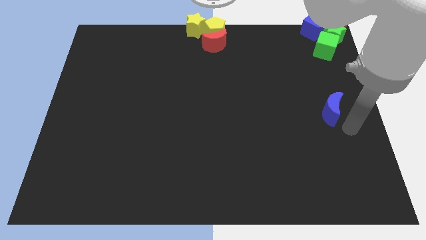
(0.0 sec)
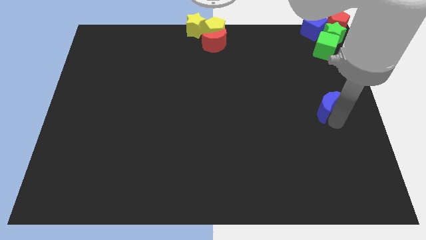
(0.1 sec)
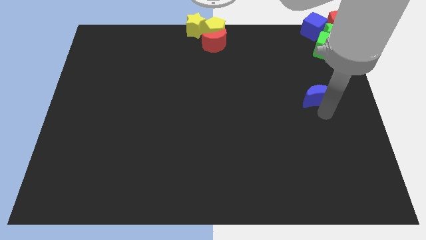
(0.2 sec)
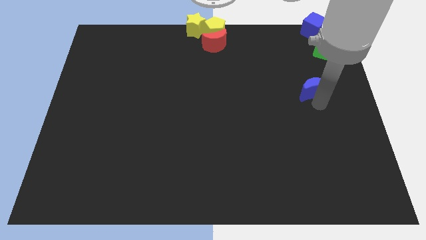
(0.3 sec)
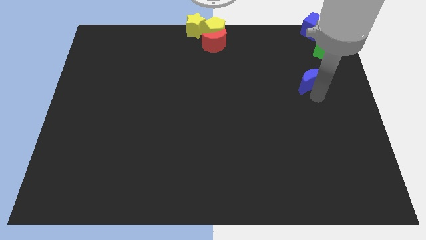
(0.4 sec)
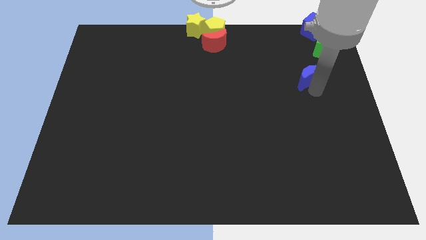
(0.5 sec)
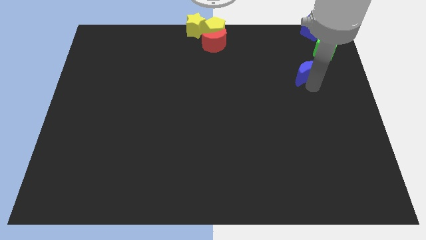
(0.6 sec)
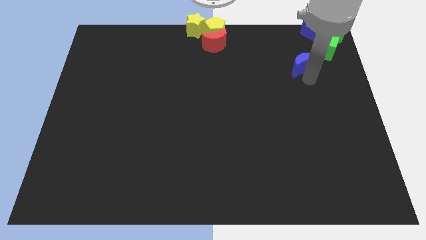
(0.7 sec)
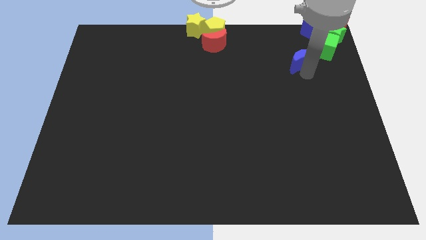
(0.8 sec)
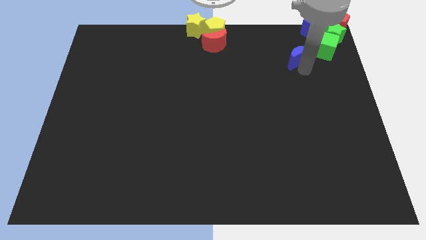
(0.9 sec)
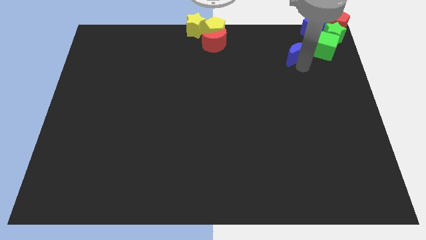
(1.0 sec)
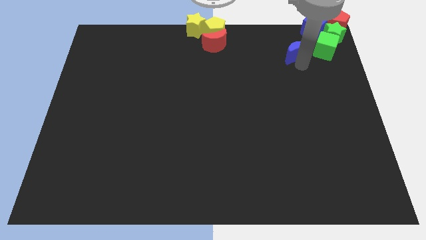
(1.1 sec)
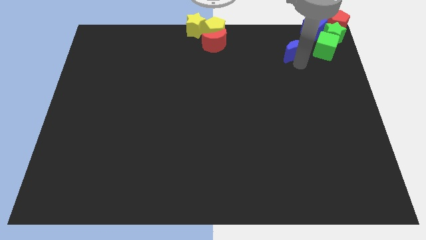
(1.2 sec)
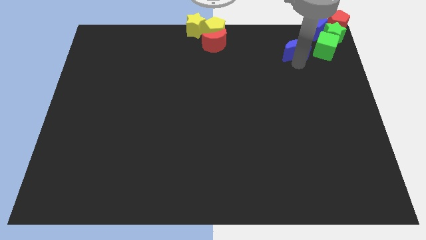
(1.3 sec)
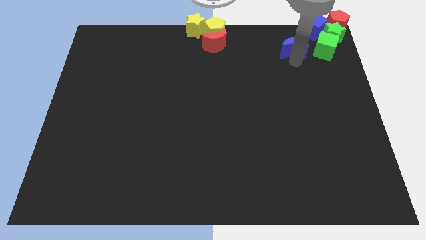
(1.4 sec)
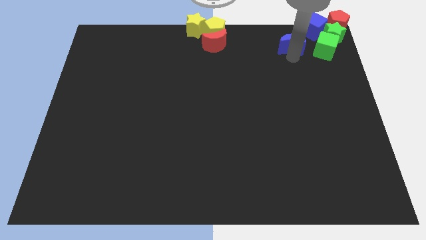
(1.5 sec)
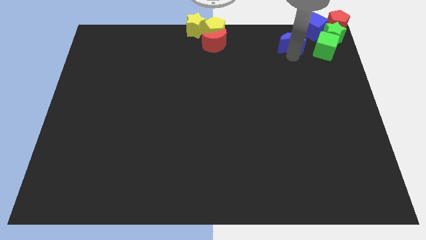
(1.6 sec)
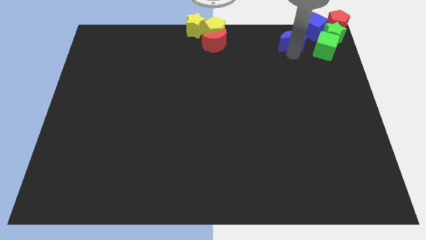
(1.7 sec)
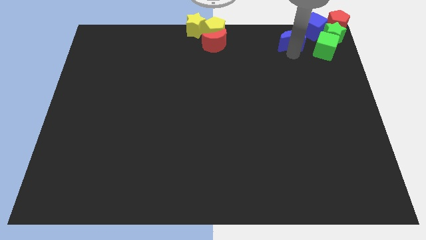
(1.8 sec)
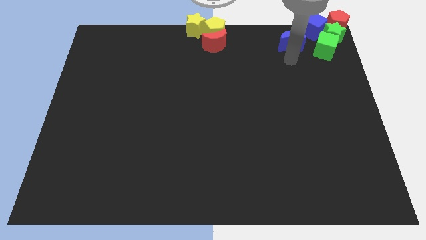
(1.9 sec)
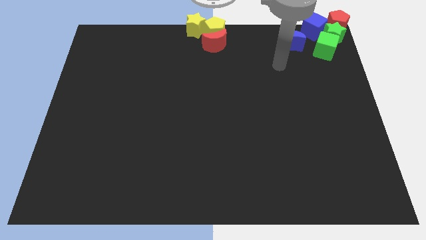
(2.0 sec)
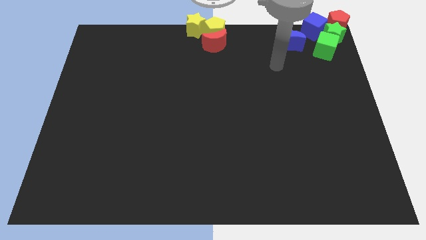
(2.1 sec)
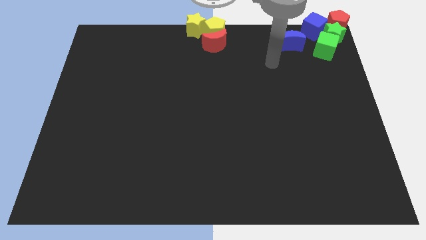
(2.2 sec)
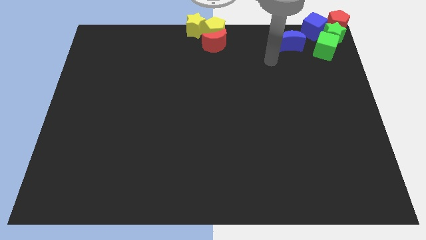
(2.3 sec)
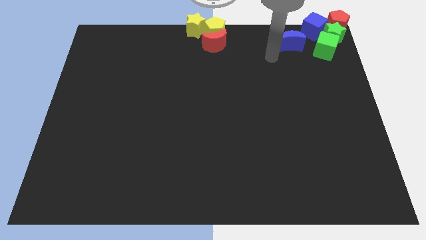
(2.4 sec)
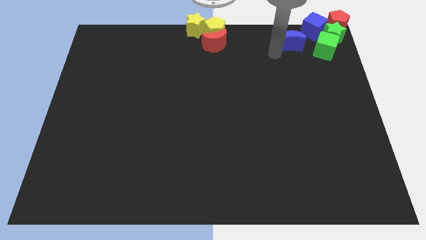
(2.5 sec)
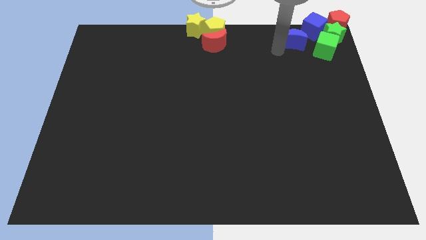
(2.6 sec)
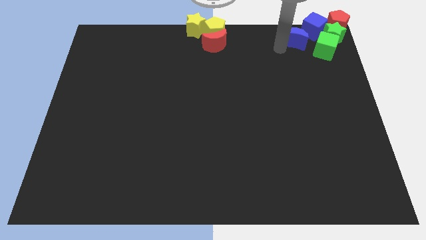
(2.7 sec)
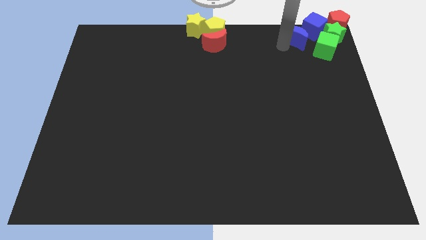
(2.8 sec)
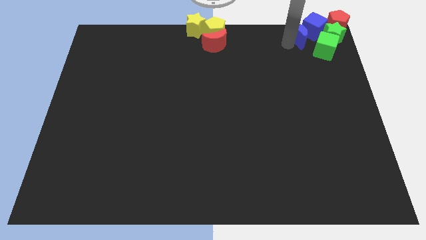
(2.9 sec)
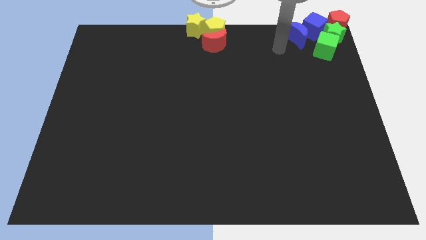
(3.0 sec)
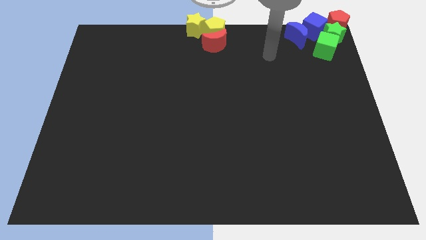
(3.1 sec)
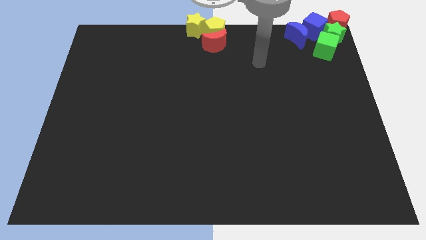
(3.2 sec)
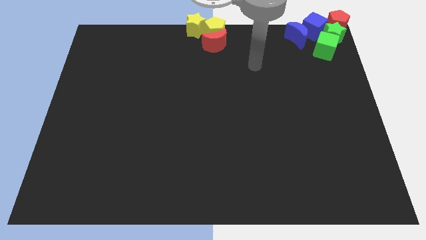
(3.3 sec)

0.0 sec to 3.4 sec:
place blue moon close to blue cube

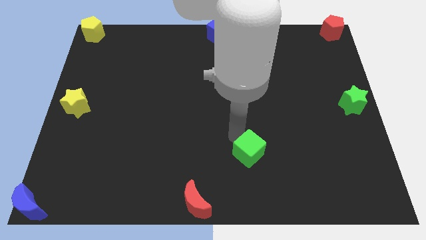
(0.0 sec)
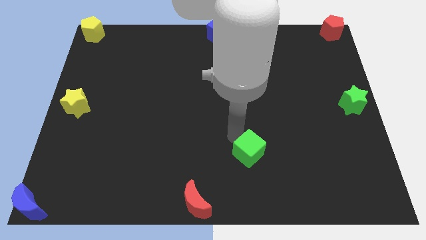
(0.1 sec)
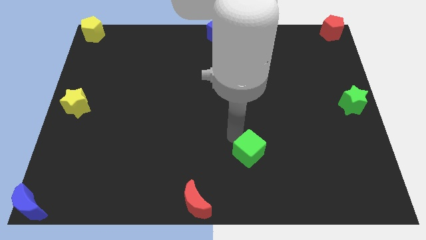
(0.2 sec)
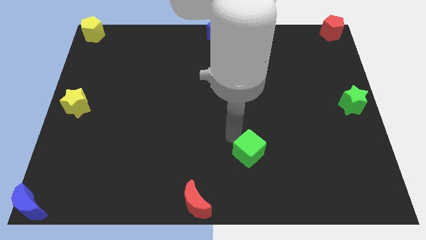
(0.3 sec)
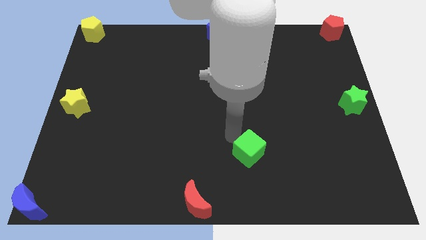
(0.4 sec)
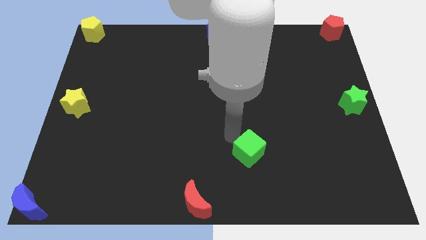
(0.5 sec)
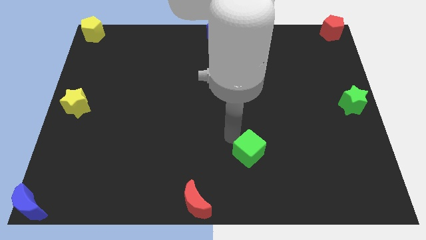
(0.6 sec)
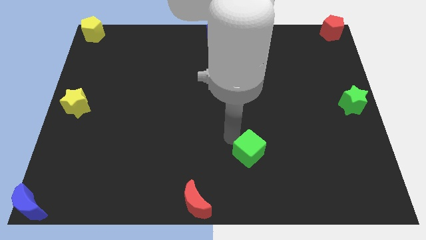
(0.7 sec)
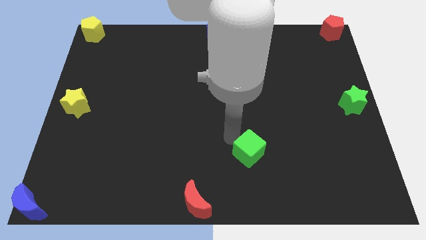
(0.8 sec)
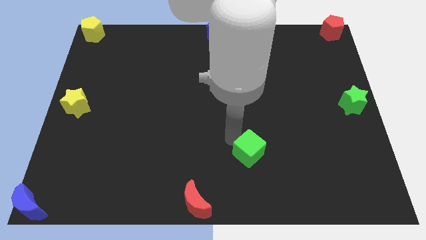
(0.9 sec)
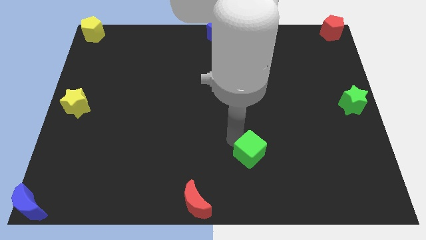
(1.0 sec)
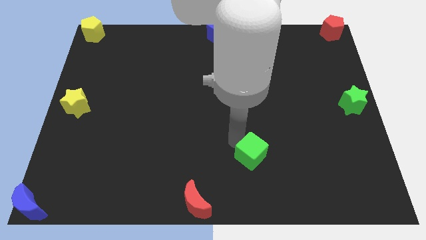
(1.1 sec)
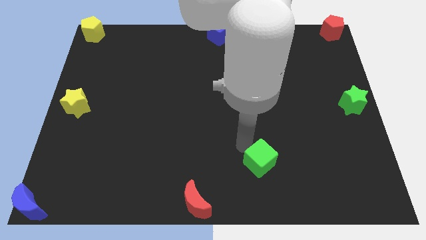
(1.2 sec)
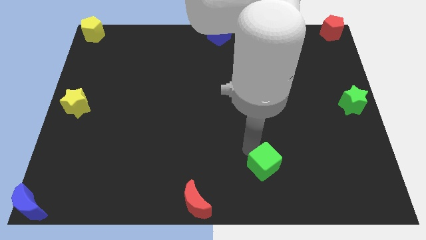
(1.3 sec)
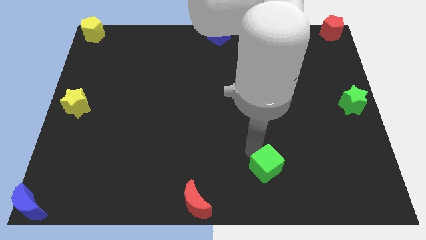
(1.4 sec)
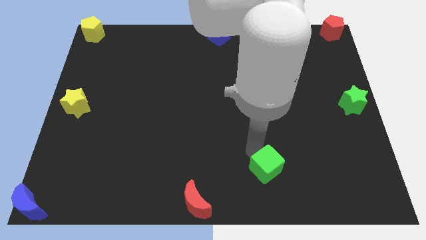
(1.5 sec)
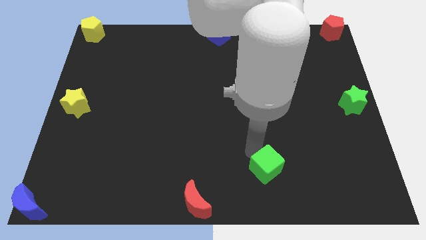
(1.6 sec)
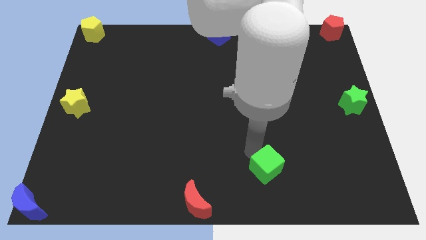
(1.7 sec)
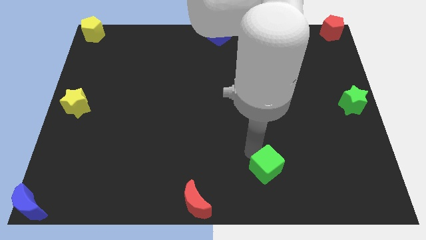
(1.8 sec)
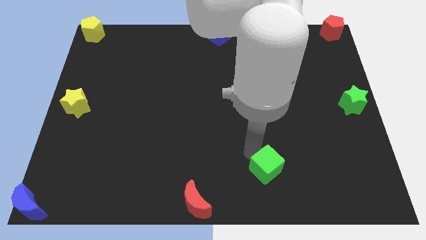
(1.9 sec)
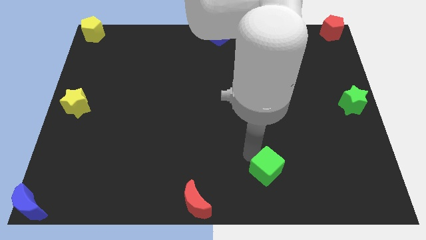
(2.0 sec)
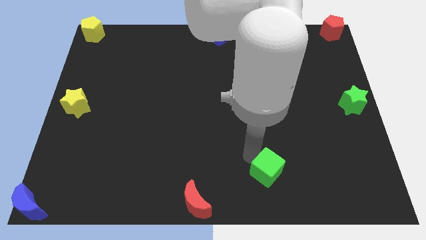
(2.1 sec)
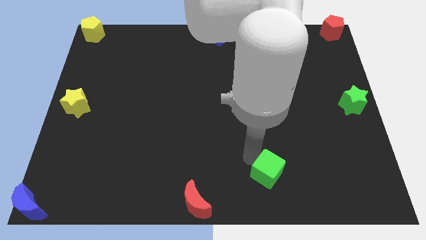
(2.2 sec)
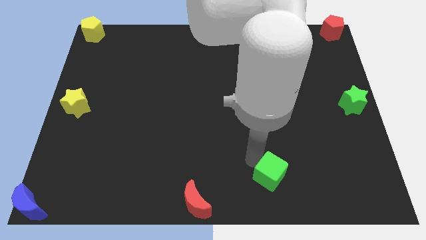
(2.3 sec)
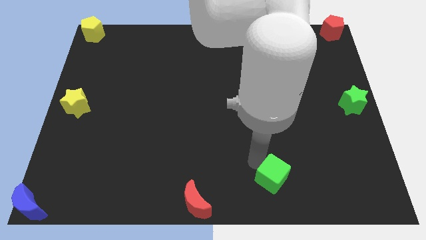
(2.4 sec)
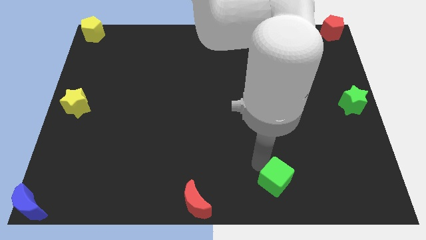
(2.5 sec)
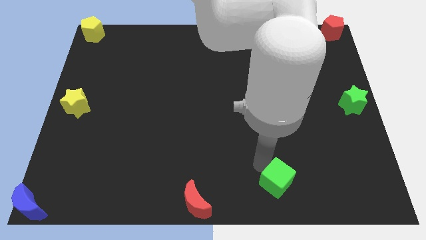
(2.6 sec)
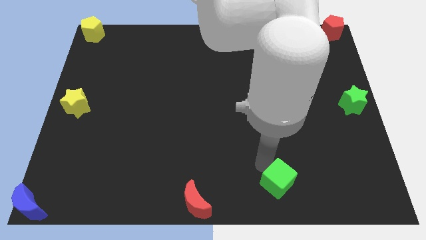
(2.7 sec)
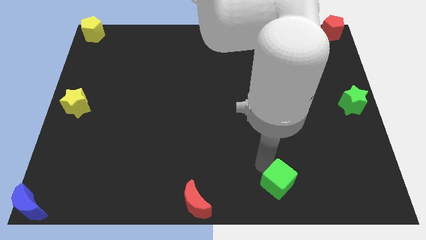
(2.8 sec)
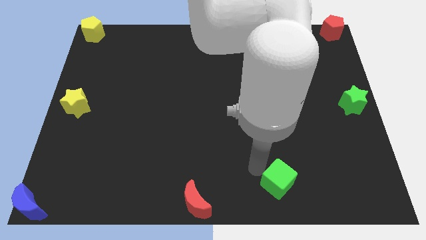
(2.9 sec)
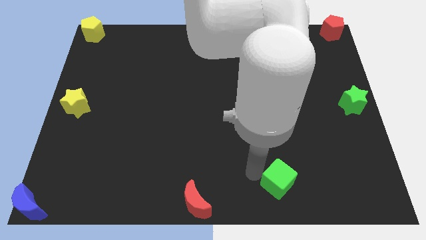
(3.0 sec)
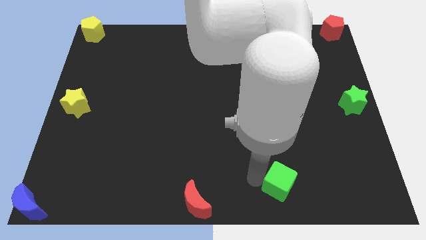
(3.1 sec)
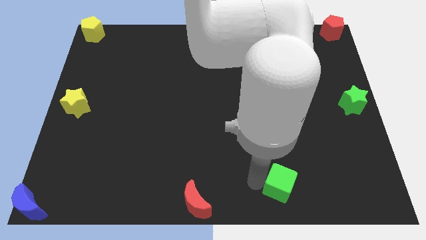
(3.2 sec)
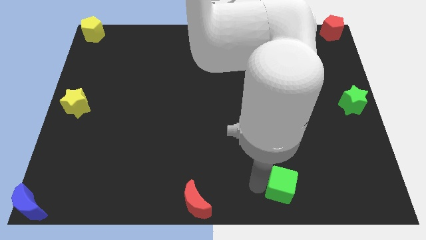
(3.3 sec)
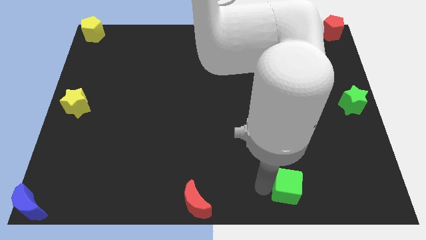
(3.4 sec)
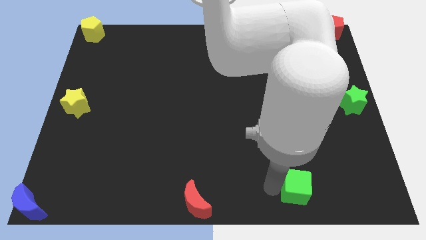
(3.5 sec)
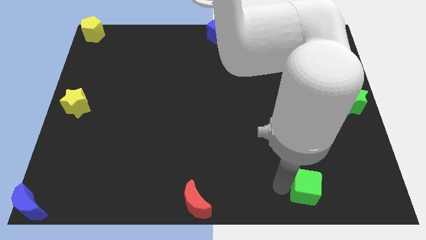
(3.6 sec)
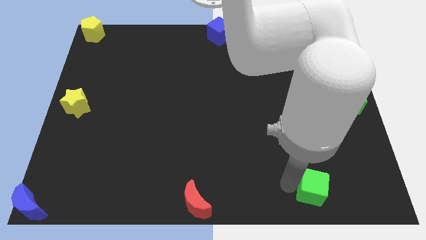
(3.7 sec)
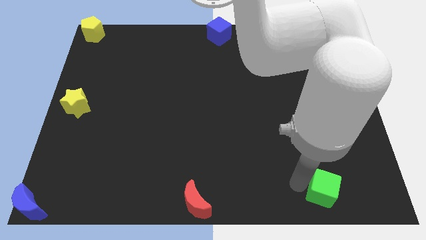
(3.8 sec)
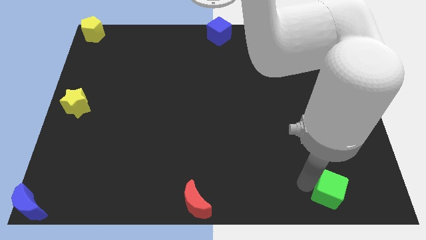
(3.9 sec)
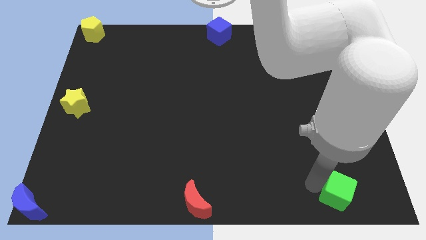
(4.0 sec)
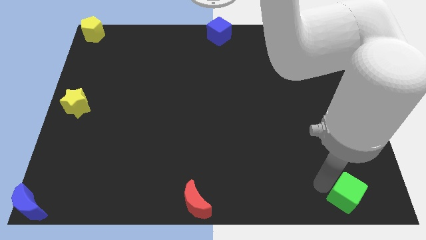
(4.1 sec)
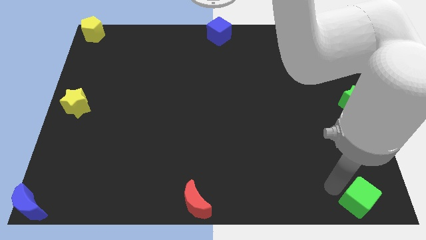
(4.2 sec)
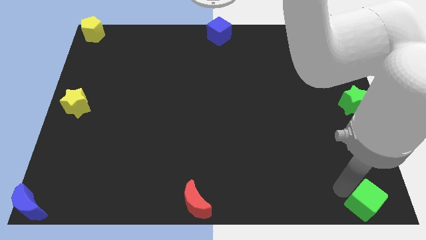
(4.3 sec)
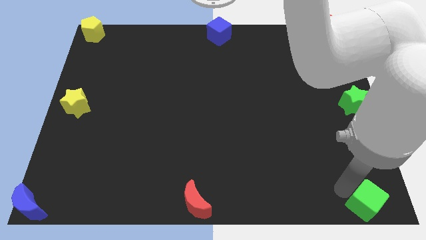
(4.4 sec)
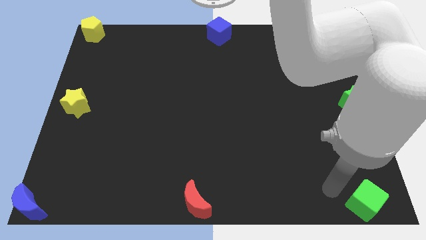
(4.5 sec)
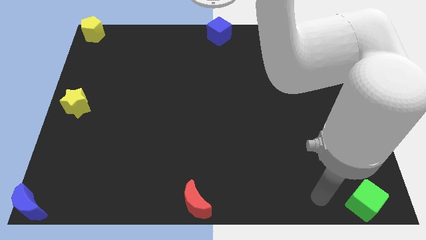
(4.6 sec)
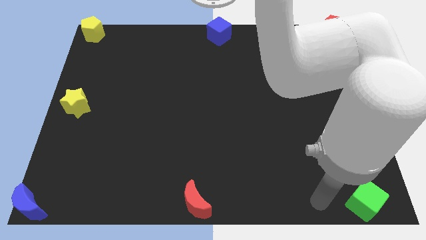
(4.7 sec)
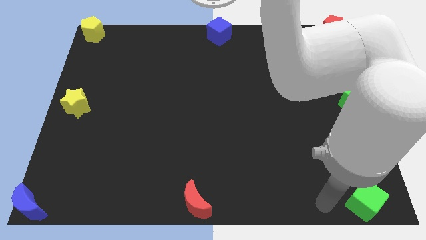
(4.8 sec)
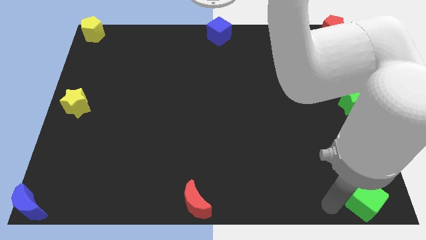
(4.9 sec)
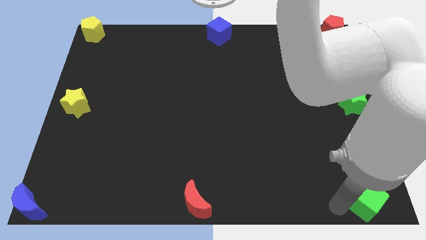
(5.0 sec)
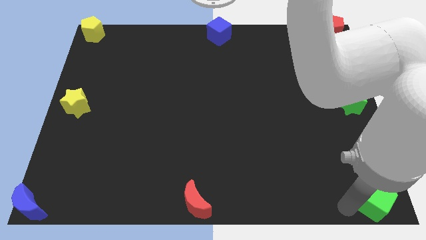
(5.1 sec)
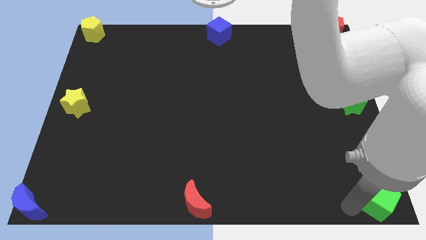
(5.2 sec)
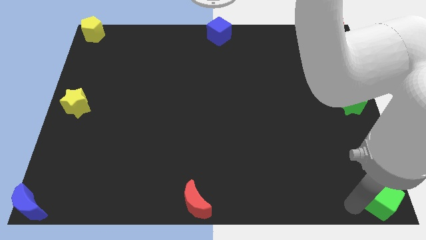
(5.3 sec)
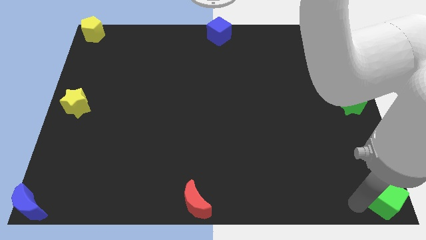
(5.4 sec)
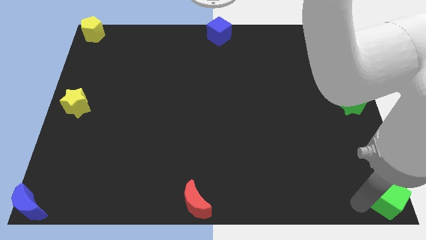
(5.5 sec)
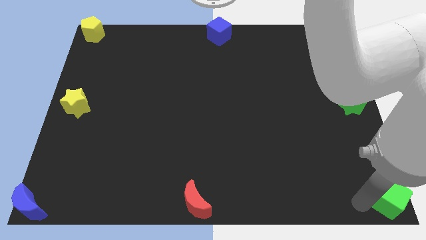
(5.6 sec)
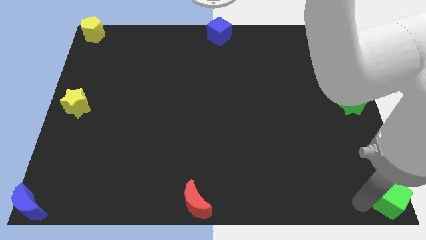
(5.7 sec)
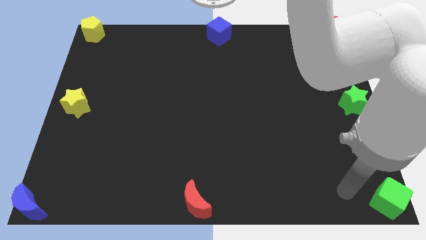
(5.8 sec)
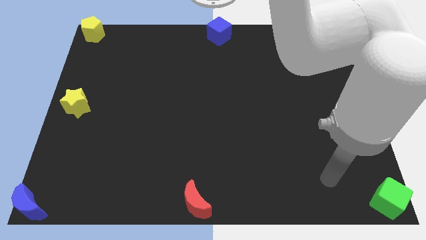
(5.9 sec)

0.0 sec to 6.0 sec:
push the green cube to the bottom right corner of the board
